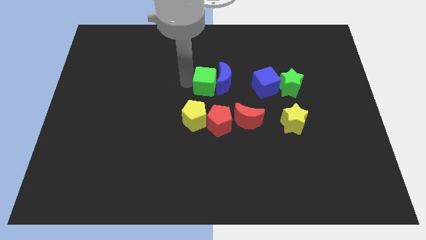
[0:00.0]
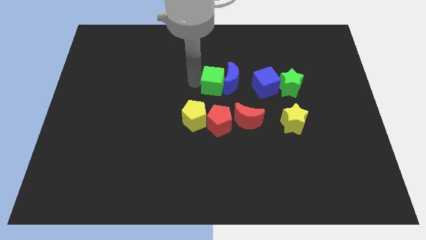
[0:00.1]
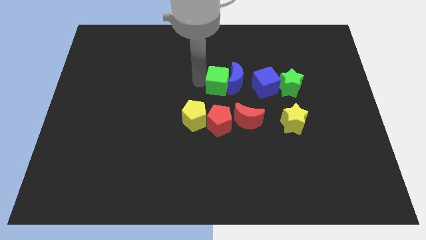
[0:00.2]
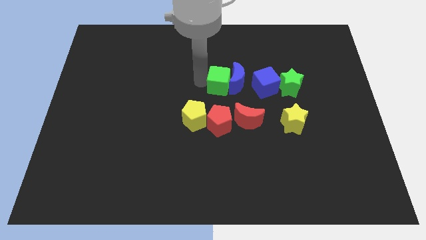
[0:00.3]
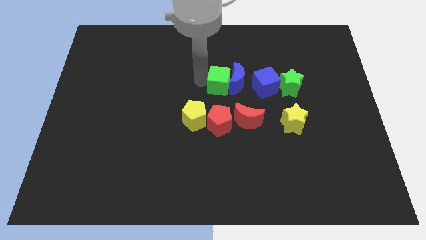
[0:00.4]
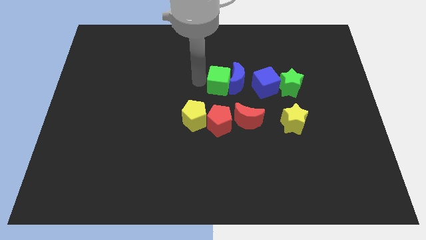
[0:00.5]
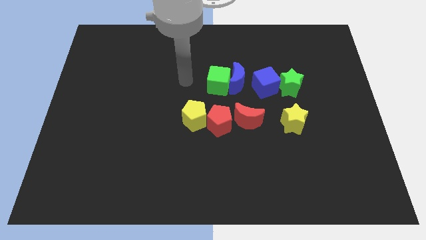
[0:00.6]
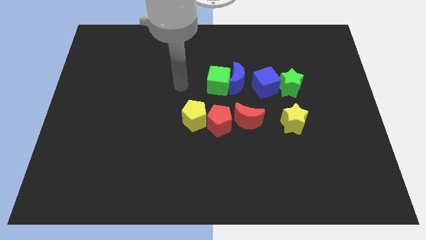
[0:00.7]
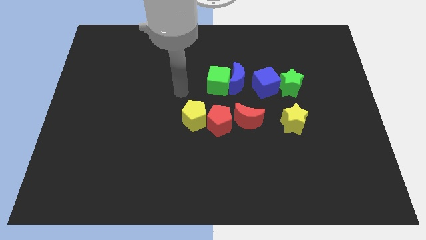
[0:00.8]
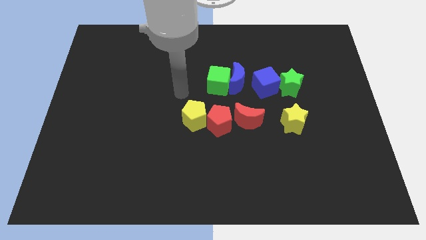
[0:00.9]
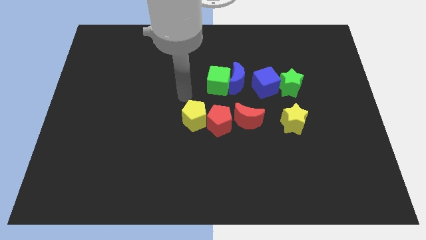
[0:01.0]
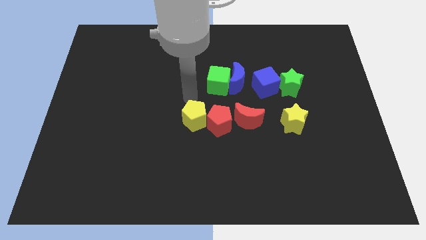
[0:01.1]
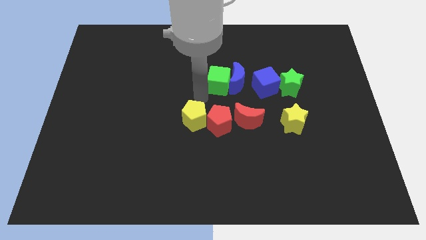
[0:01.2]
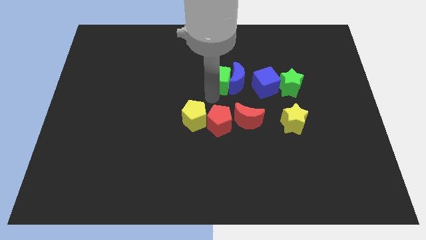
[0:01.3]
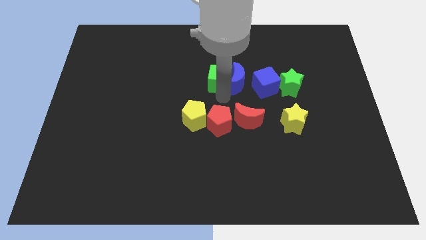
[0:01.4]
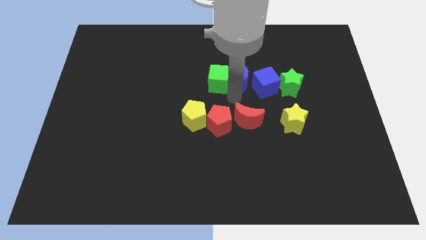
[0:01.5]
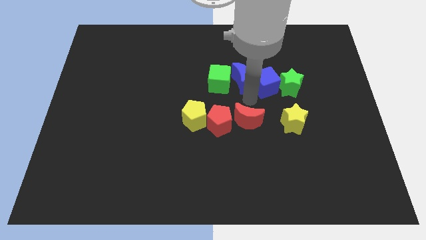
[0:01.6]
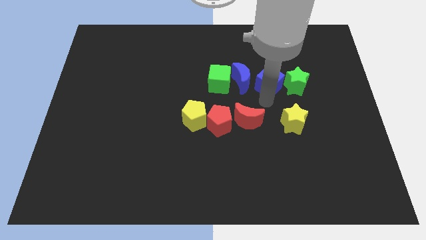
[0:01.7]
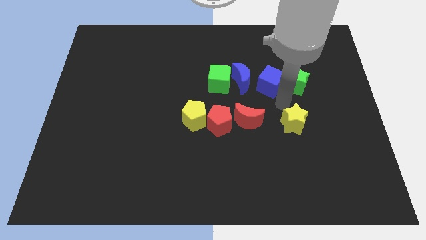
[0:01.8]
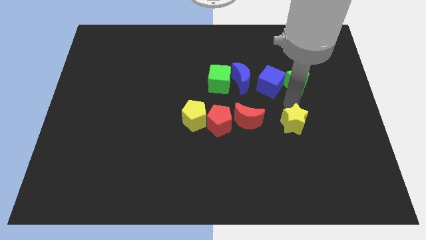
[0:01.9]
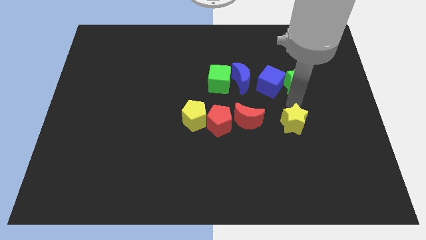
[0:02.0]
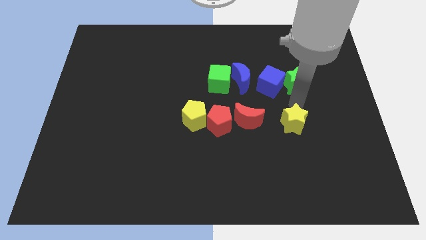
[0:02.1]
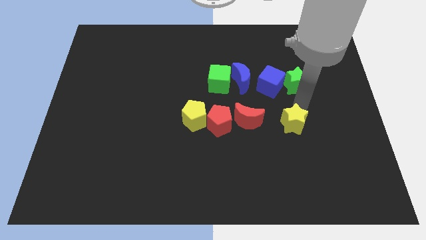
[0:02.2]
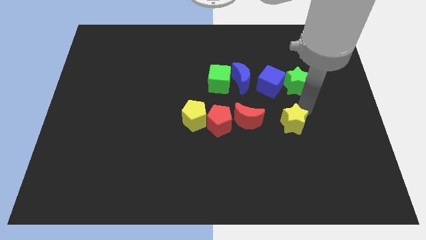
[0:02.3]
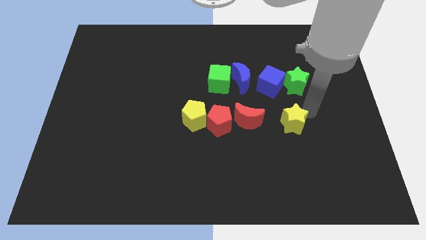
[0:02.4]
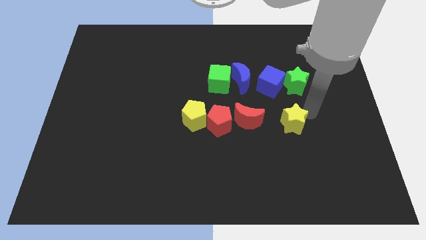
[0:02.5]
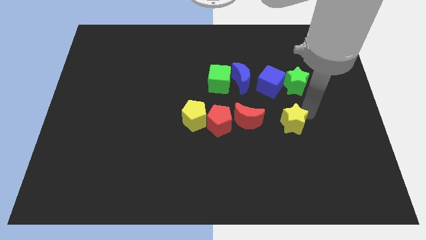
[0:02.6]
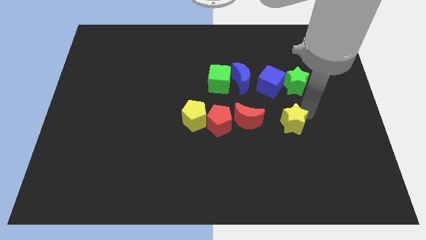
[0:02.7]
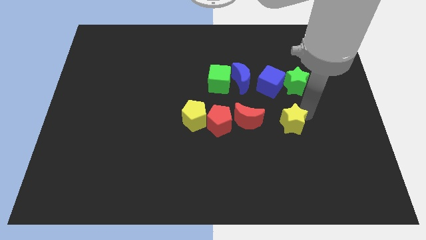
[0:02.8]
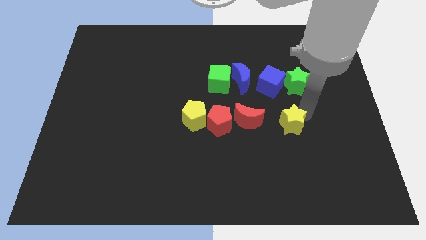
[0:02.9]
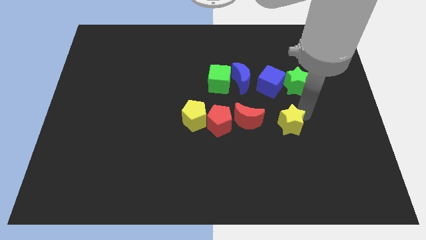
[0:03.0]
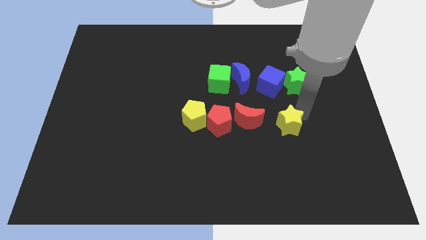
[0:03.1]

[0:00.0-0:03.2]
push slightly the yellow star towards the red moon

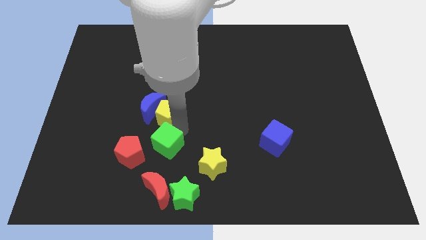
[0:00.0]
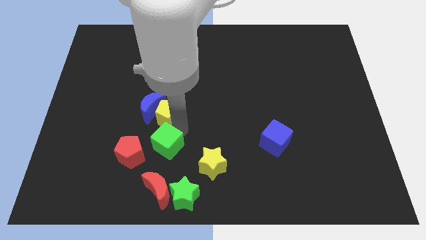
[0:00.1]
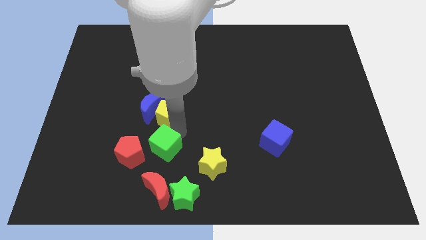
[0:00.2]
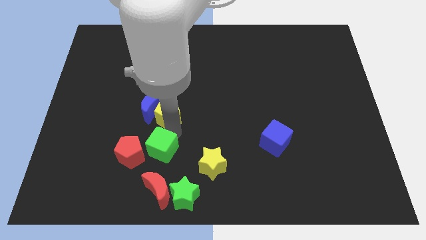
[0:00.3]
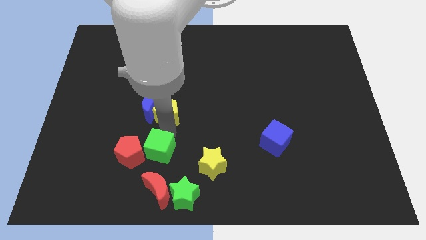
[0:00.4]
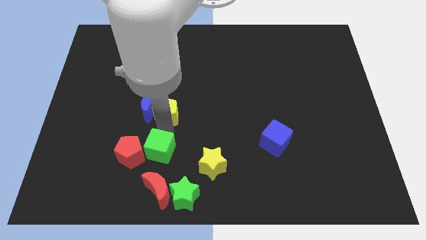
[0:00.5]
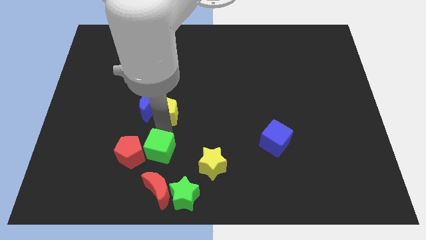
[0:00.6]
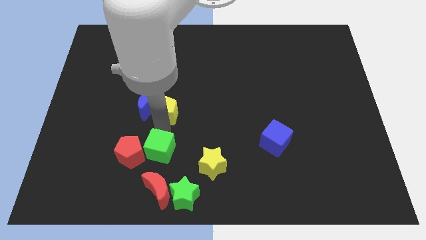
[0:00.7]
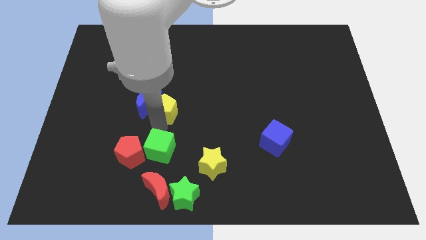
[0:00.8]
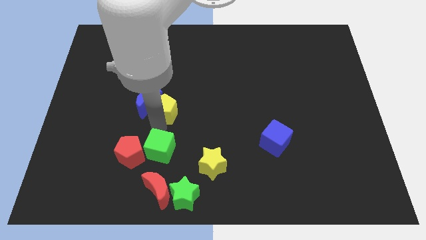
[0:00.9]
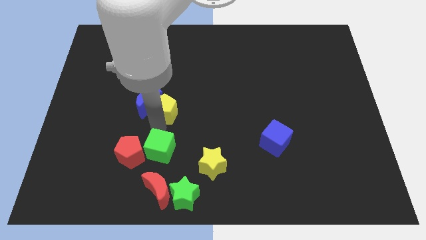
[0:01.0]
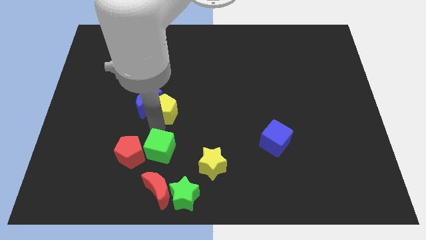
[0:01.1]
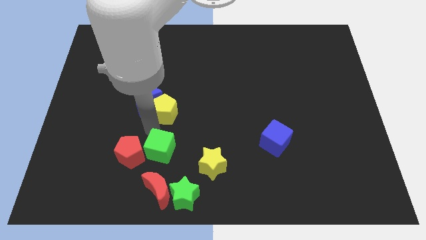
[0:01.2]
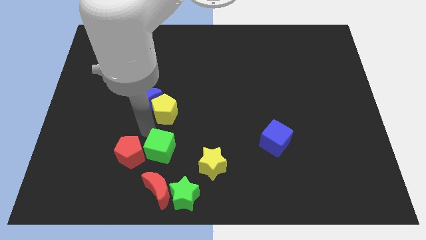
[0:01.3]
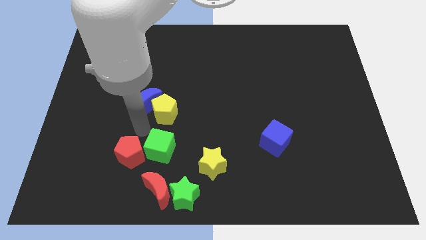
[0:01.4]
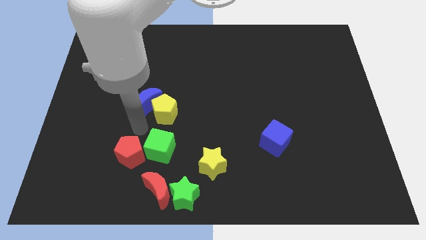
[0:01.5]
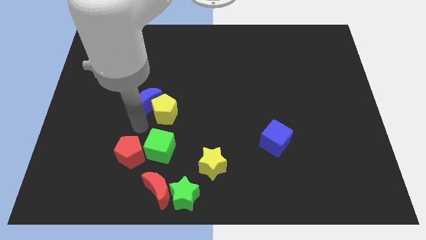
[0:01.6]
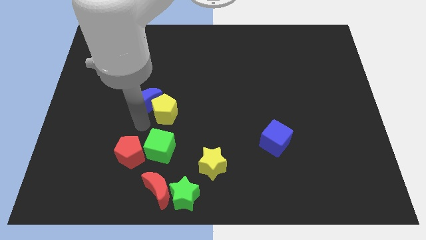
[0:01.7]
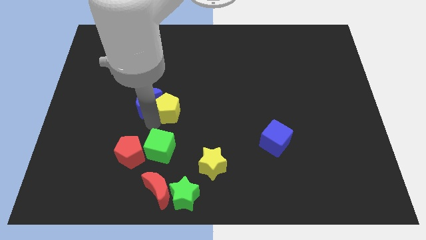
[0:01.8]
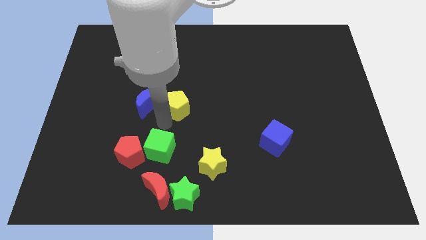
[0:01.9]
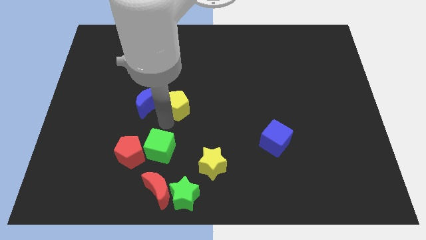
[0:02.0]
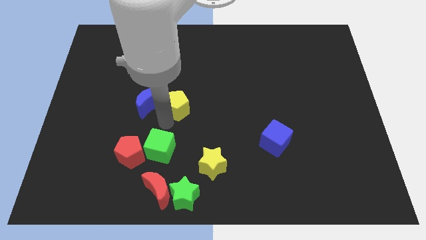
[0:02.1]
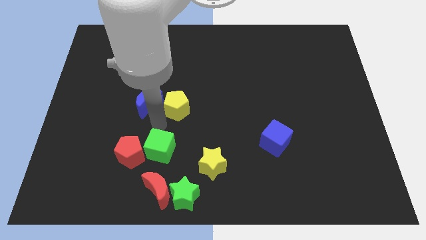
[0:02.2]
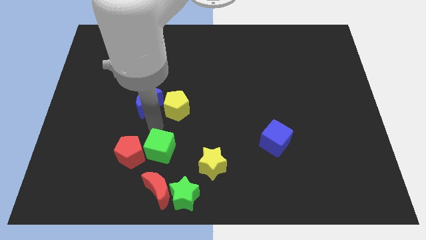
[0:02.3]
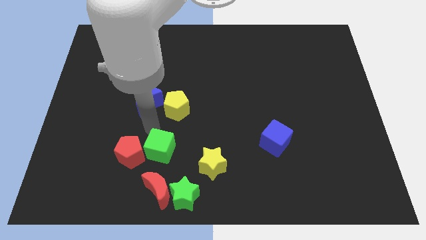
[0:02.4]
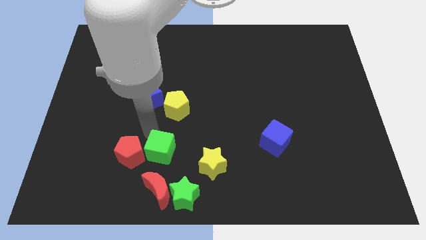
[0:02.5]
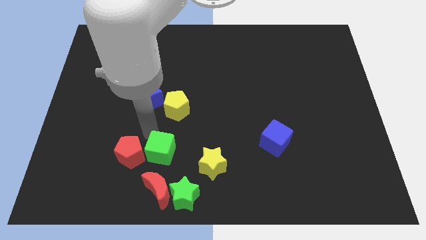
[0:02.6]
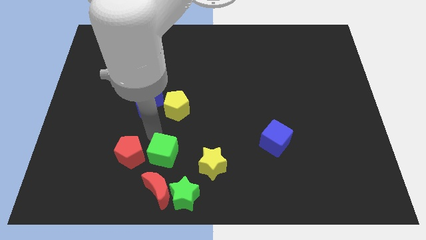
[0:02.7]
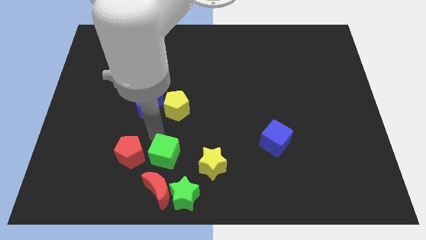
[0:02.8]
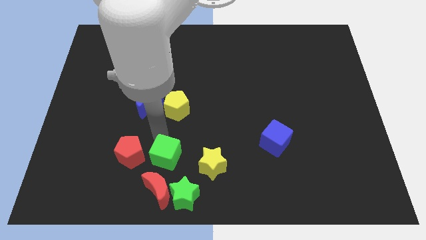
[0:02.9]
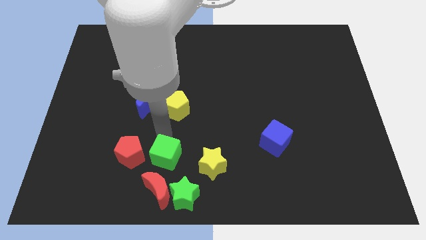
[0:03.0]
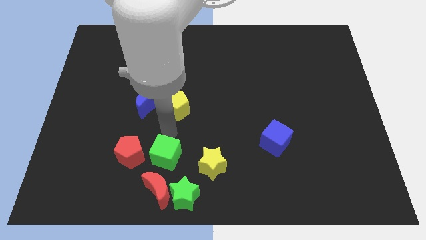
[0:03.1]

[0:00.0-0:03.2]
place your arm in between green cube and yellow pentagon

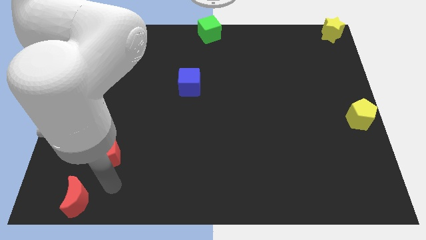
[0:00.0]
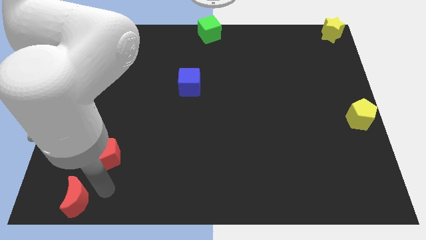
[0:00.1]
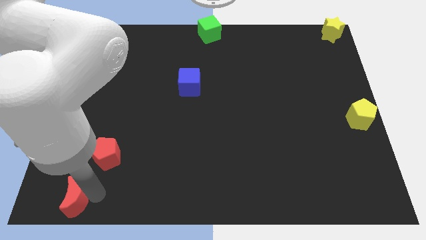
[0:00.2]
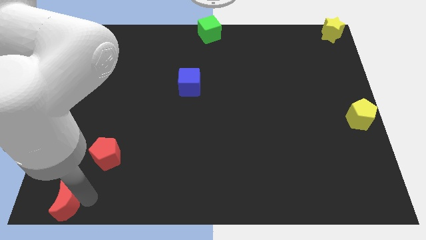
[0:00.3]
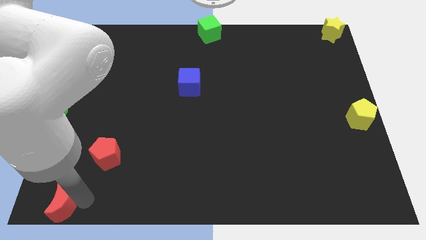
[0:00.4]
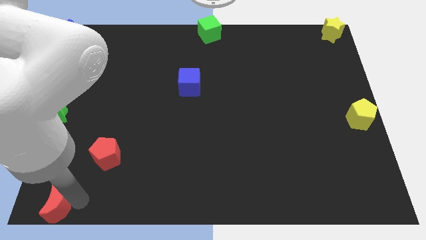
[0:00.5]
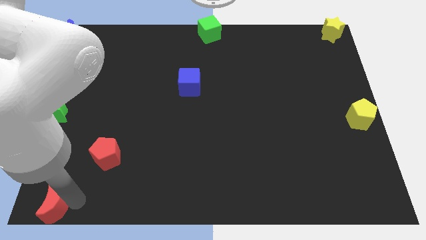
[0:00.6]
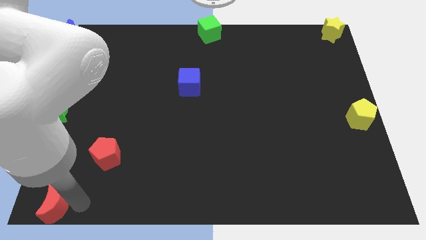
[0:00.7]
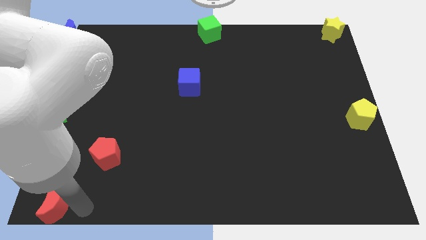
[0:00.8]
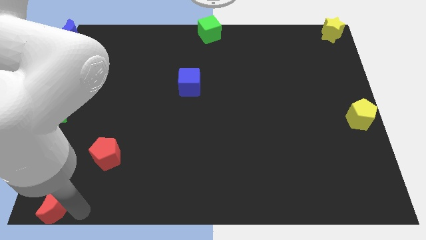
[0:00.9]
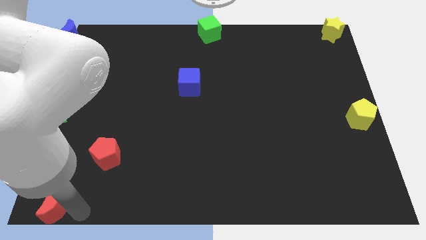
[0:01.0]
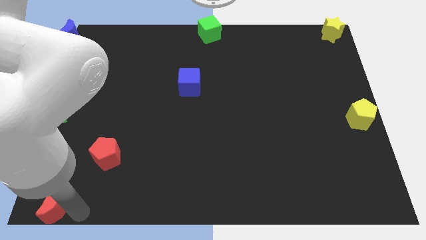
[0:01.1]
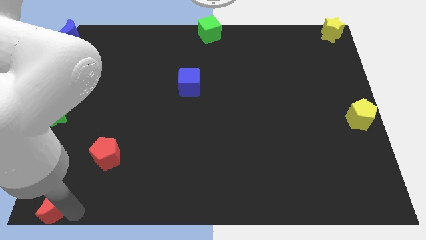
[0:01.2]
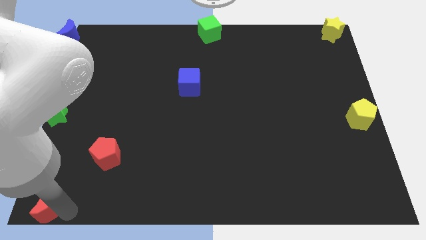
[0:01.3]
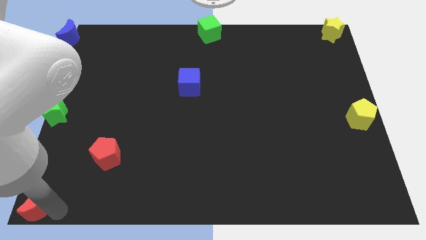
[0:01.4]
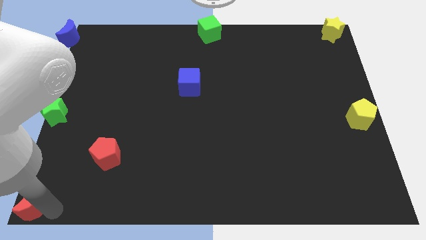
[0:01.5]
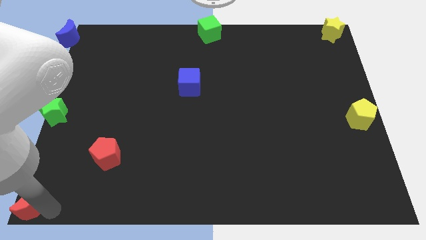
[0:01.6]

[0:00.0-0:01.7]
move the red moon to the bottom left corner

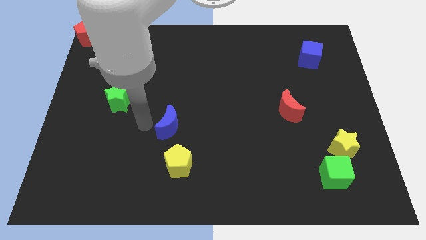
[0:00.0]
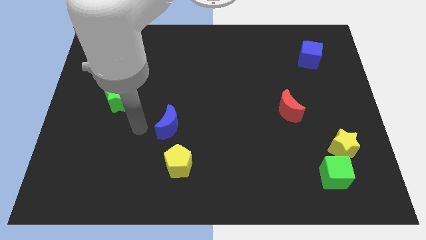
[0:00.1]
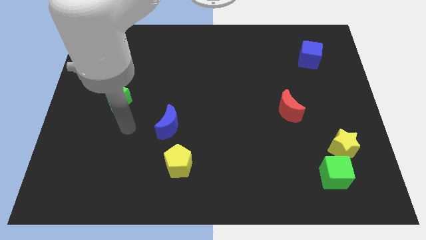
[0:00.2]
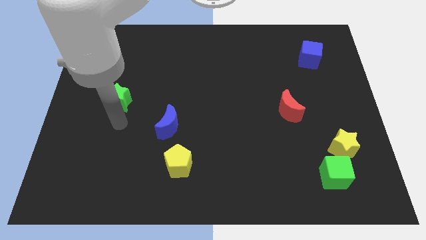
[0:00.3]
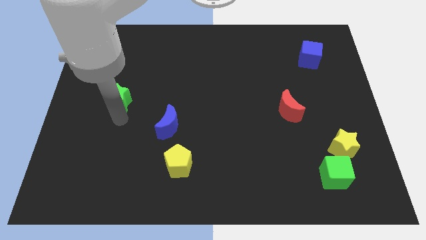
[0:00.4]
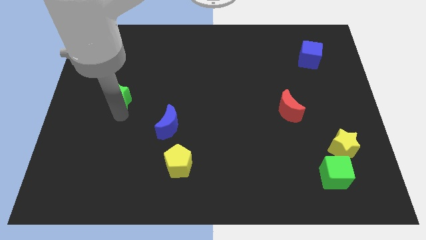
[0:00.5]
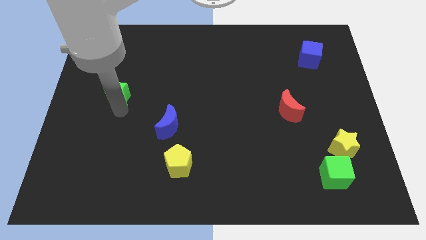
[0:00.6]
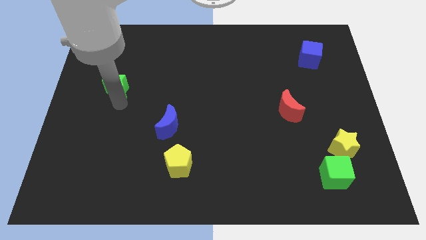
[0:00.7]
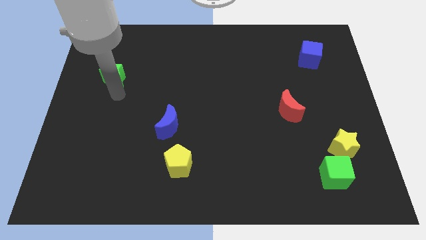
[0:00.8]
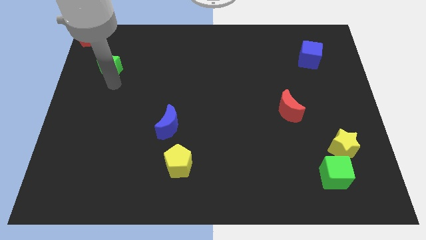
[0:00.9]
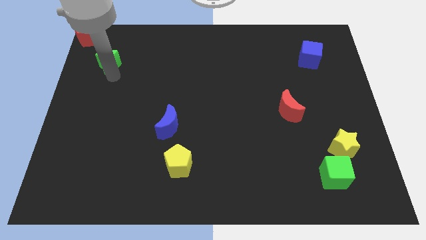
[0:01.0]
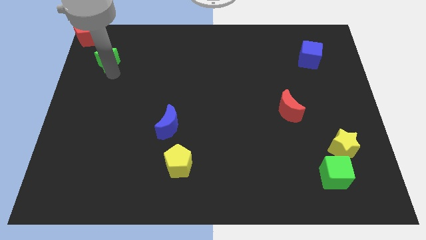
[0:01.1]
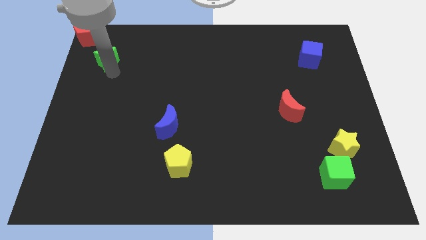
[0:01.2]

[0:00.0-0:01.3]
push the green star towards the top left corner of the board
